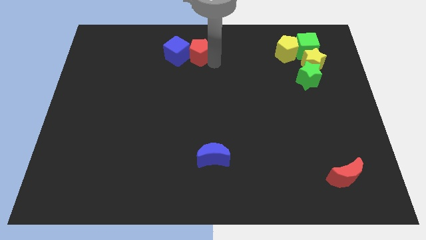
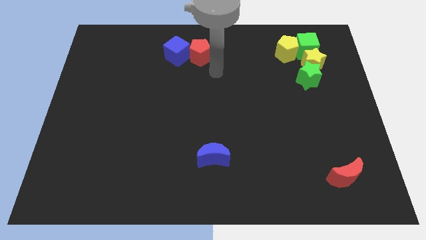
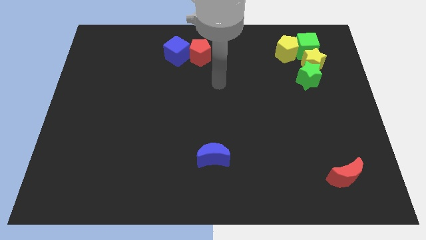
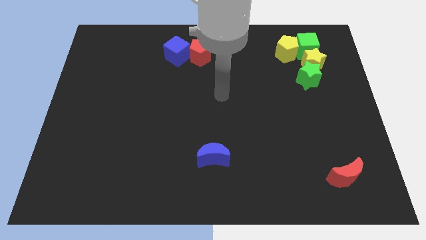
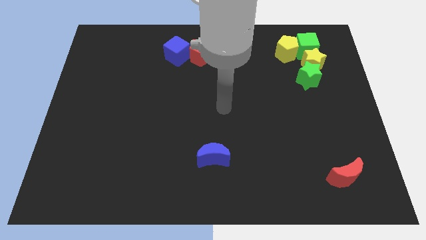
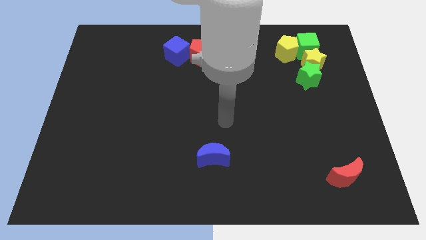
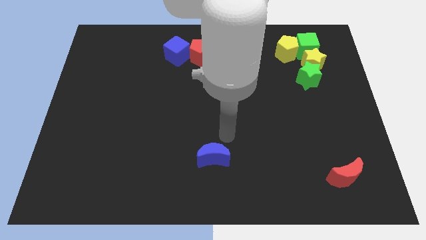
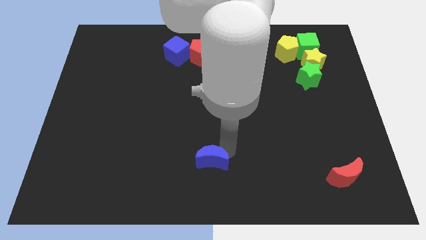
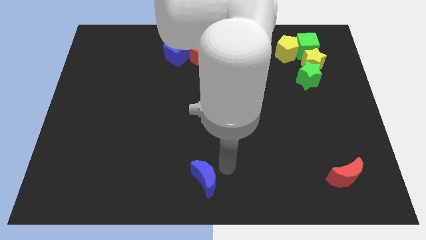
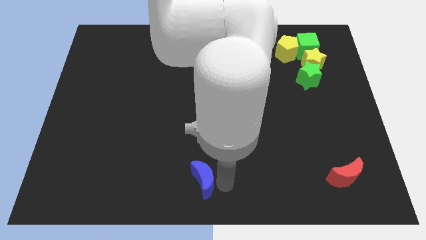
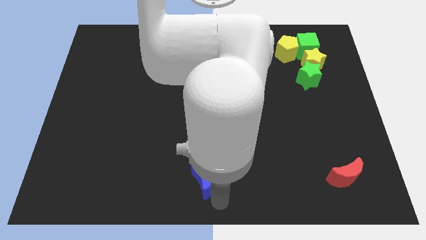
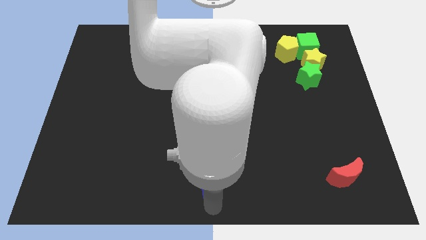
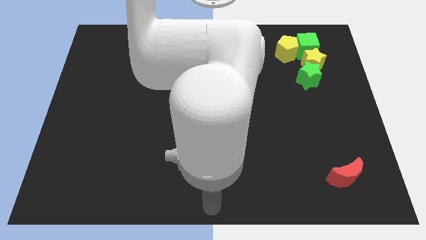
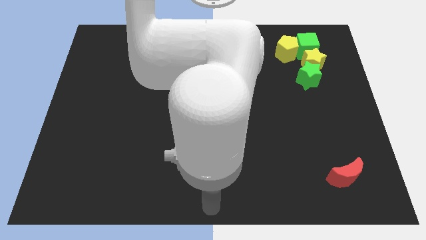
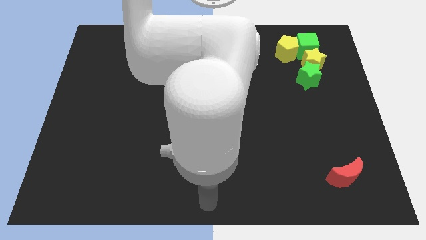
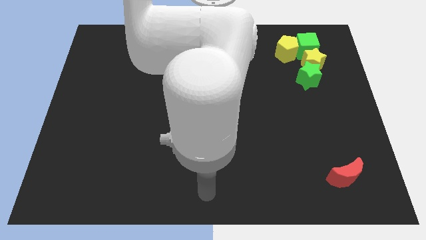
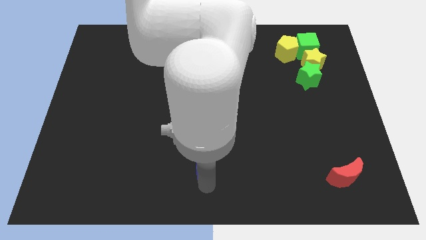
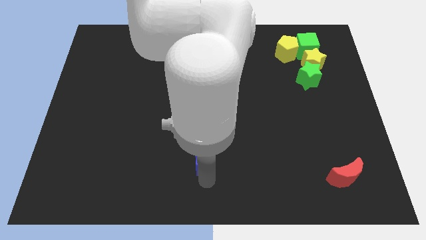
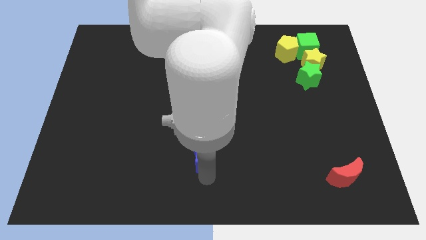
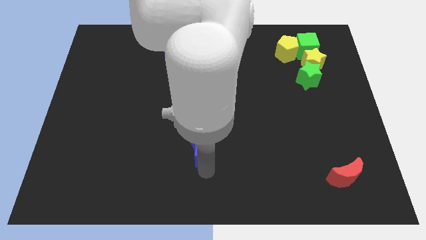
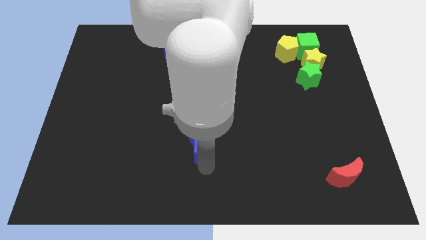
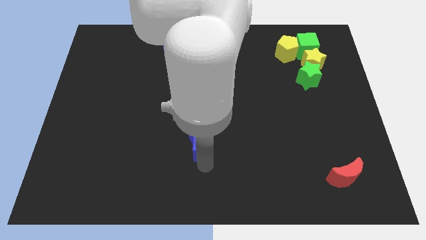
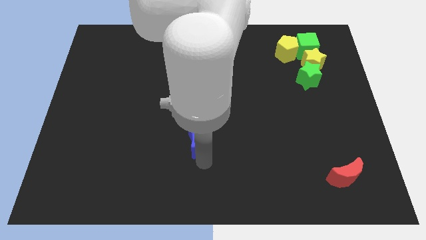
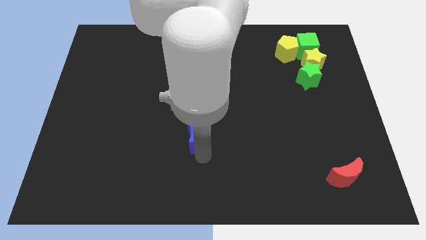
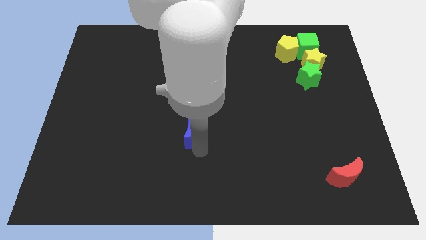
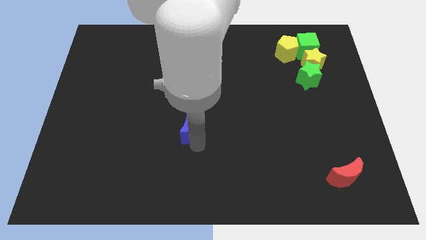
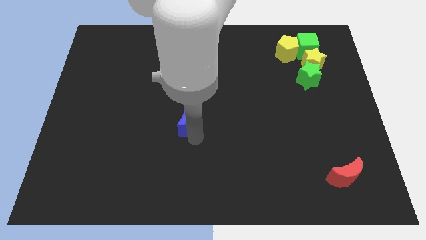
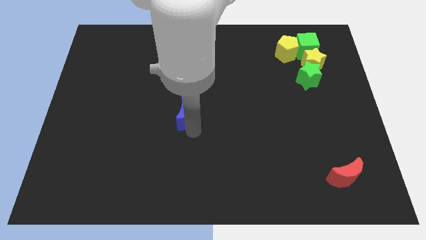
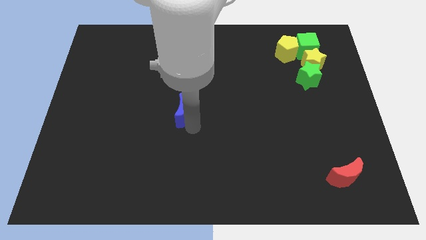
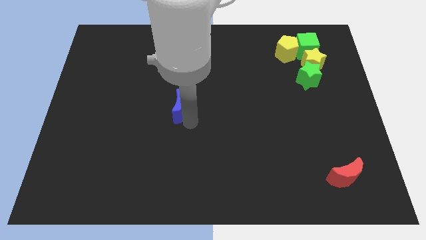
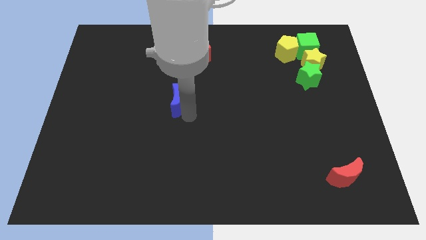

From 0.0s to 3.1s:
slide the blue moon towards the center of the board

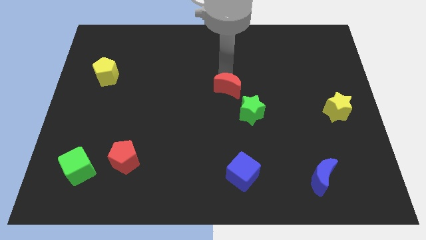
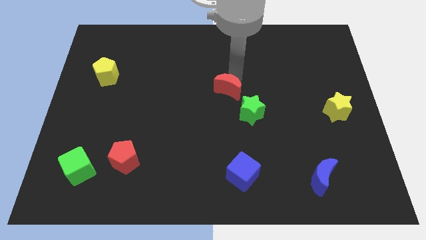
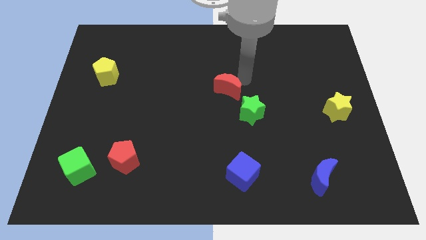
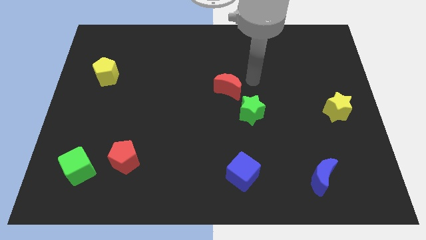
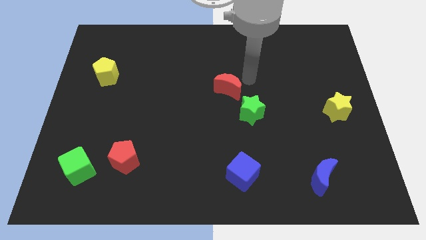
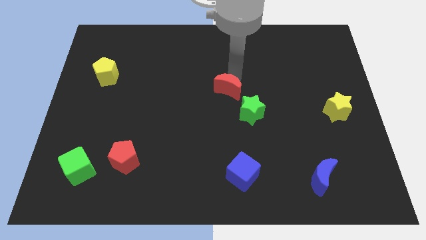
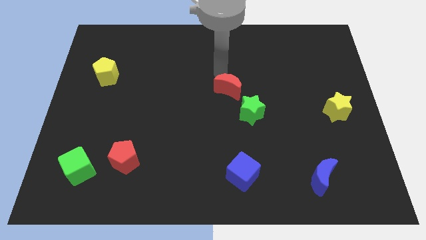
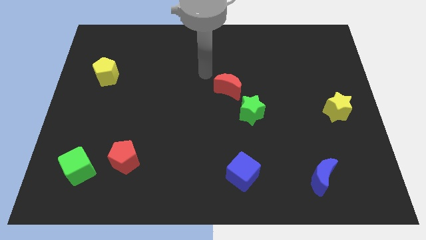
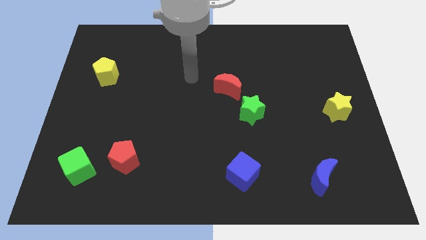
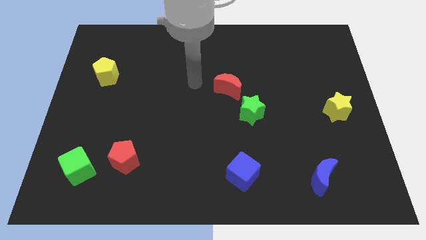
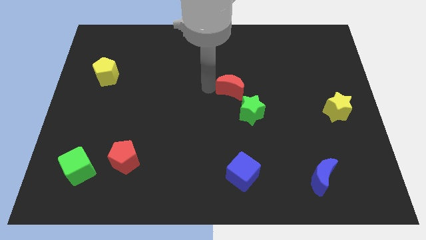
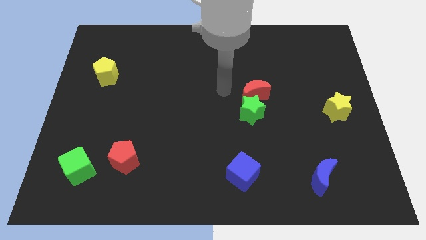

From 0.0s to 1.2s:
push red crescent above green star

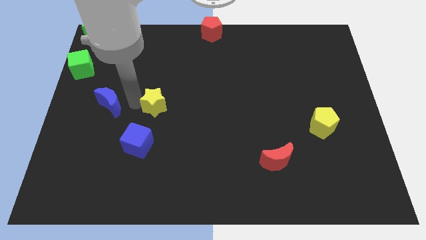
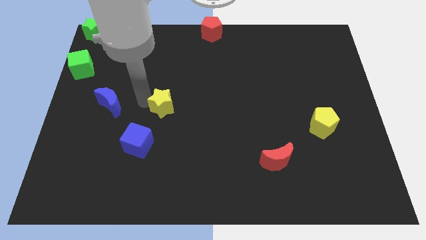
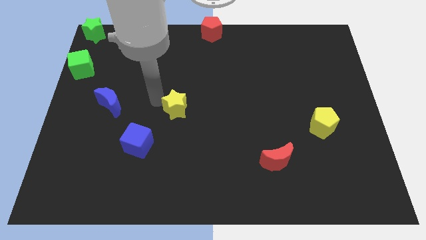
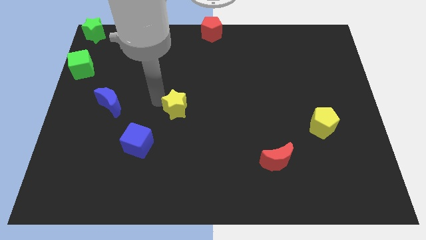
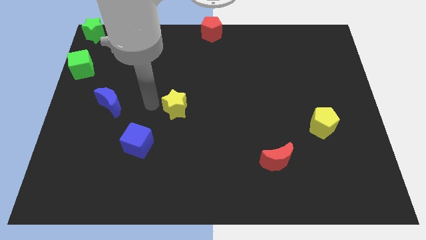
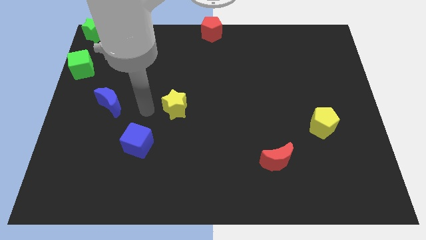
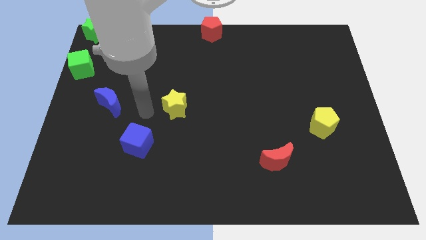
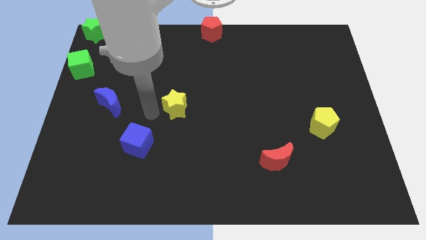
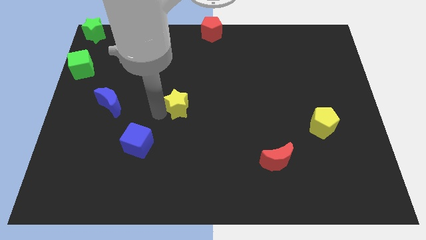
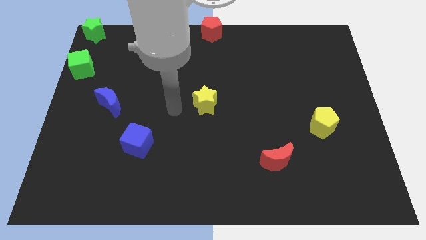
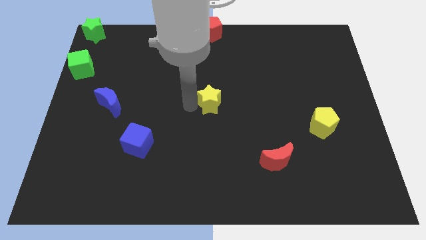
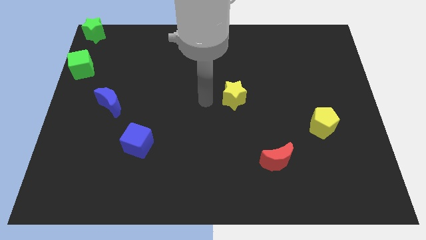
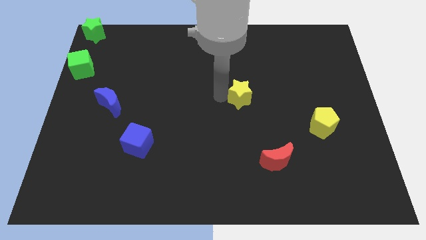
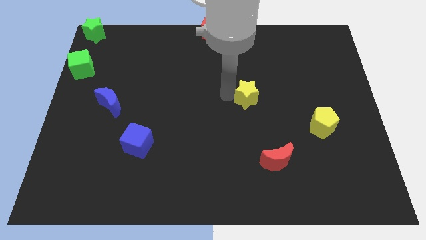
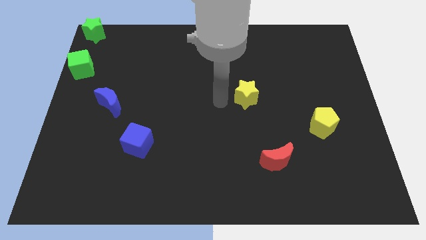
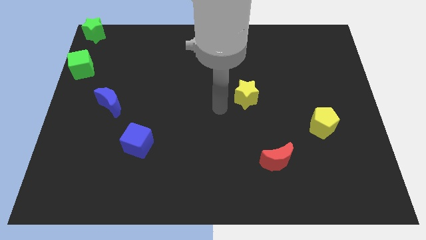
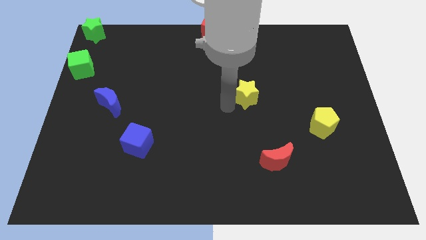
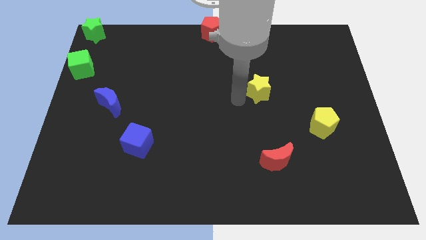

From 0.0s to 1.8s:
slide the yellow star diagonally top right to the blue cube

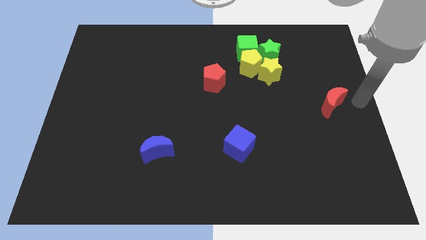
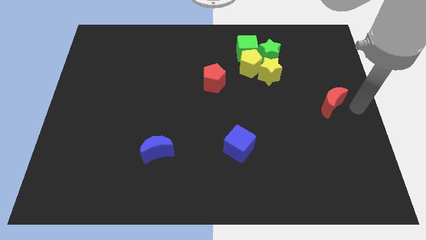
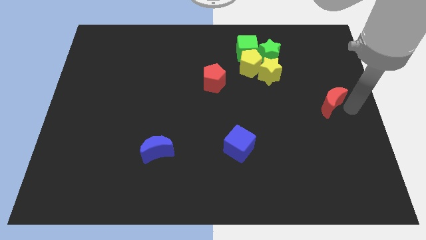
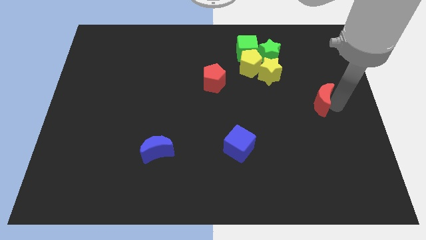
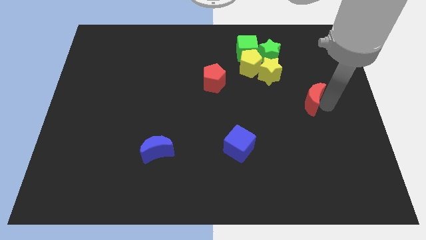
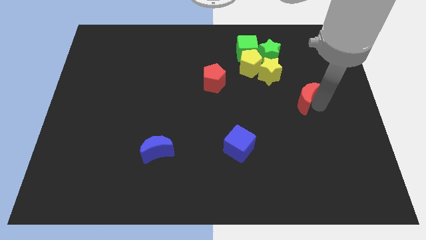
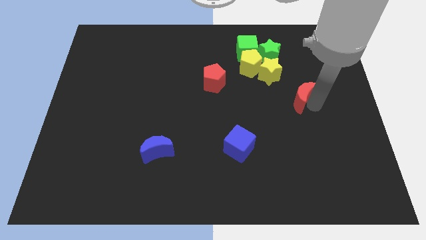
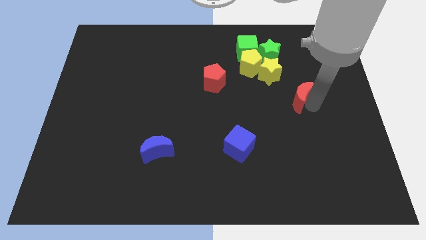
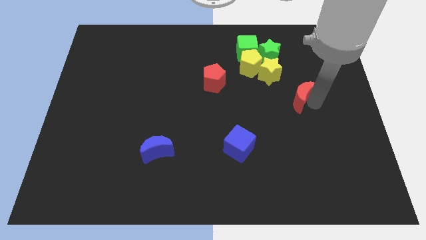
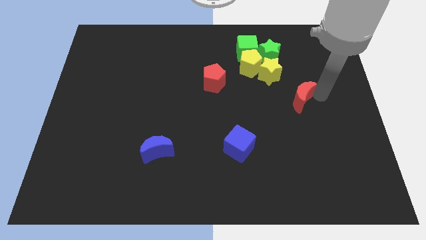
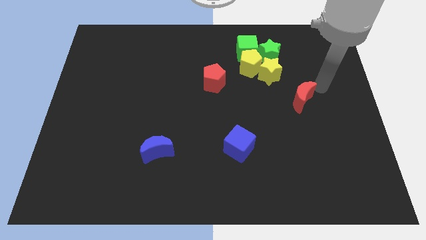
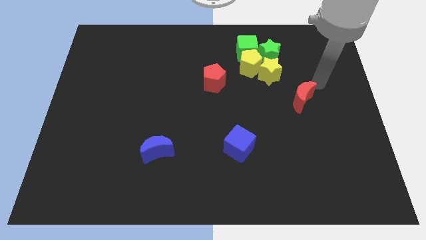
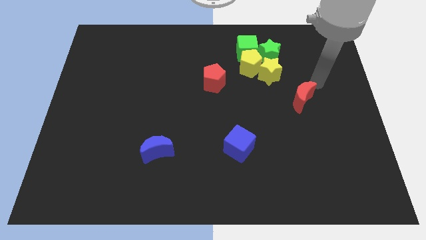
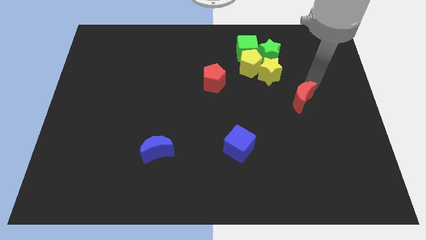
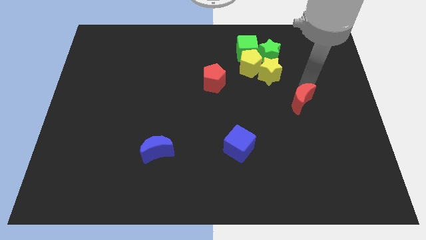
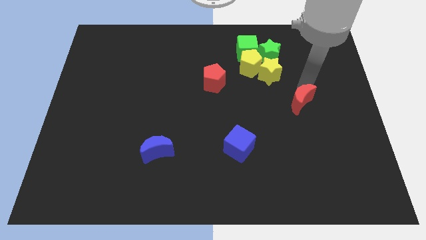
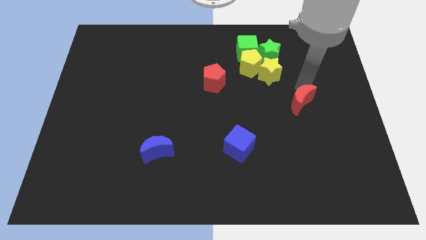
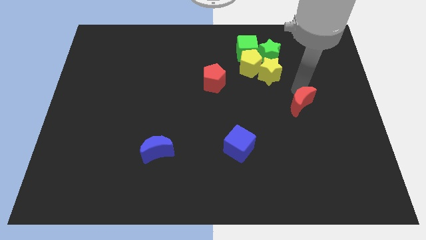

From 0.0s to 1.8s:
push the red moon diagonal below yellow star

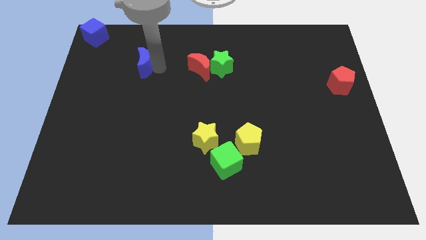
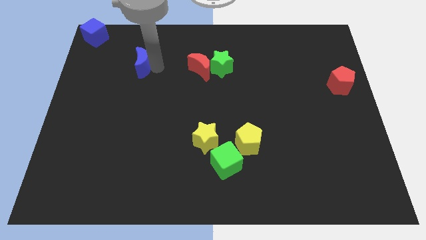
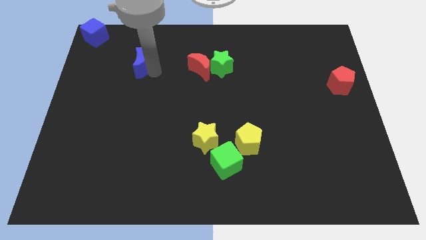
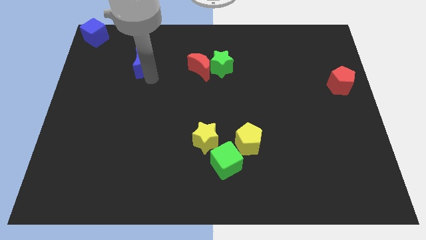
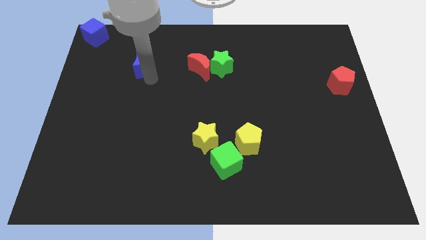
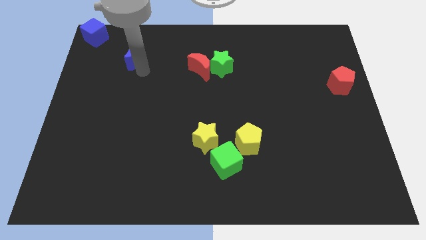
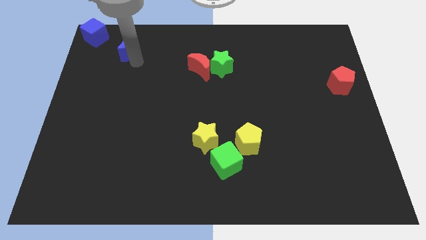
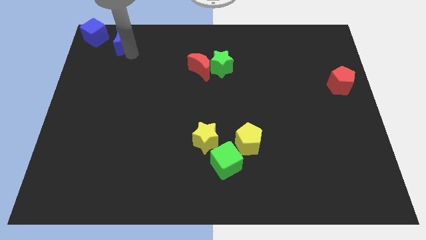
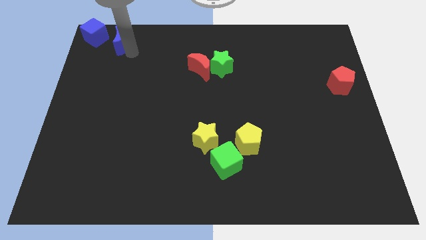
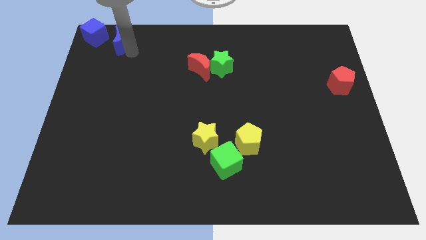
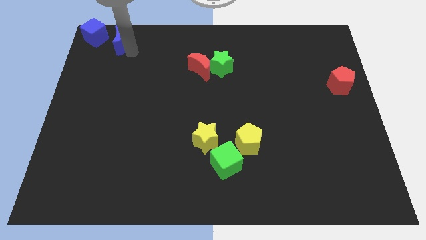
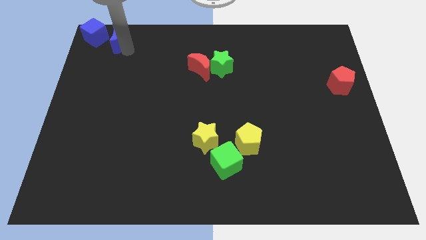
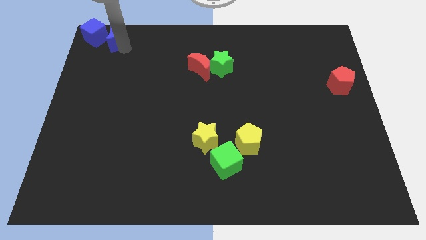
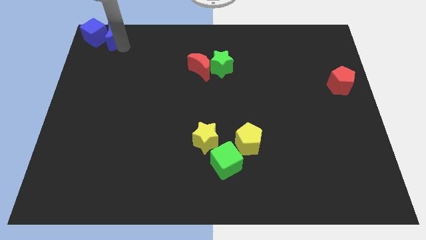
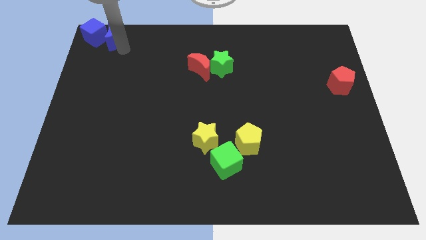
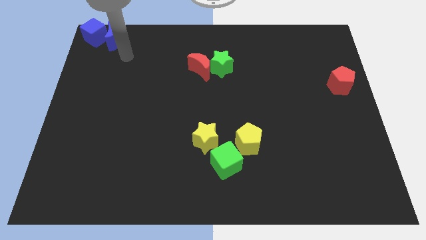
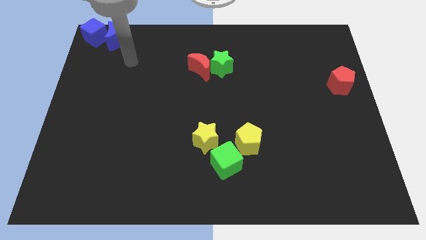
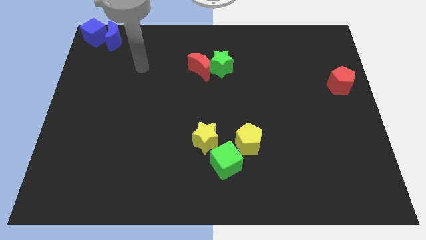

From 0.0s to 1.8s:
push the blue crescent close to the blue cube
